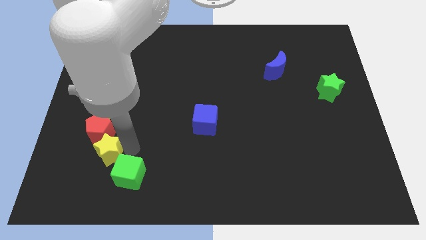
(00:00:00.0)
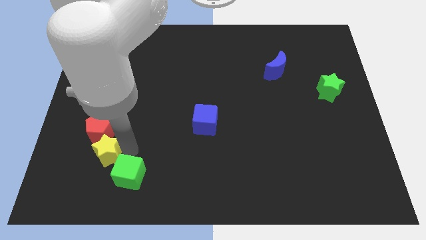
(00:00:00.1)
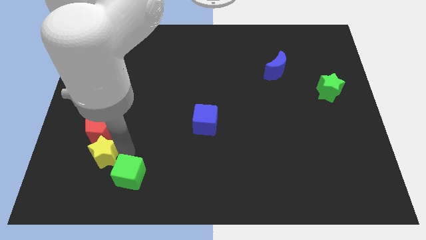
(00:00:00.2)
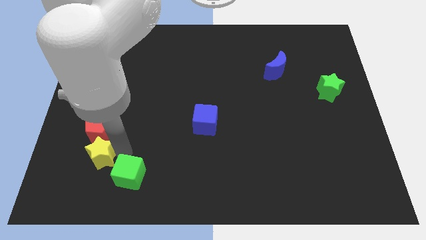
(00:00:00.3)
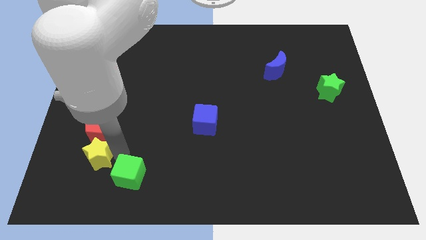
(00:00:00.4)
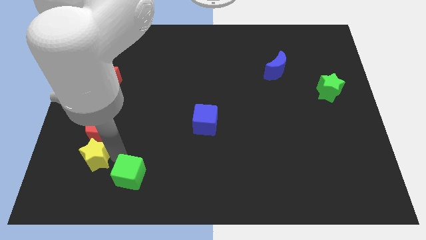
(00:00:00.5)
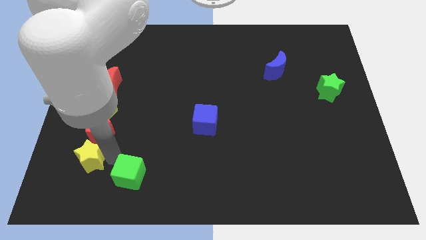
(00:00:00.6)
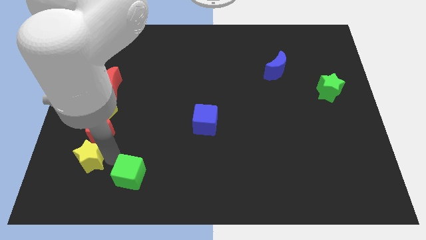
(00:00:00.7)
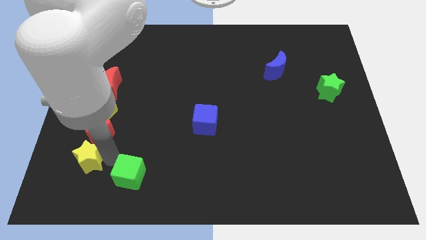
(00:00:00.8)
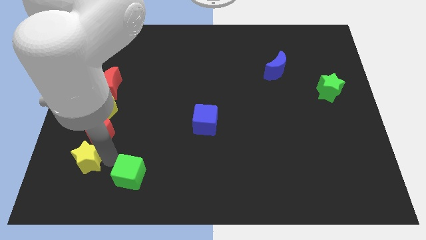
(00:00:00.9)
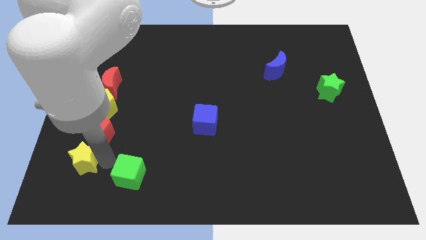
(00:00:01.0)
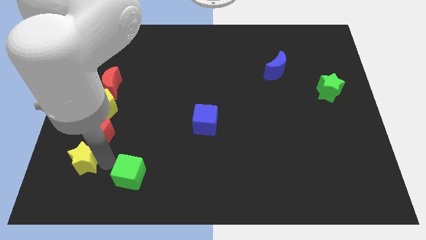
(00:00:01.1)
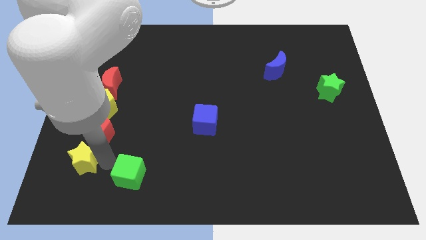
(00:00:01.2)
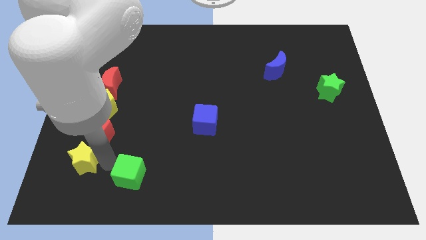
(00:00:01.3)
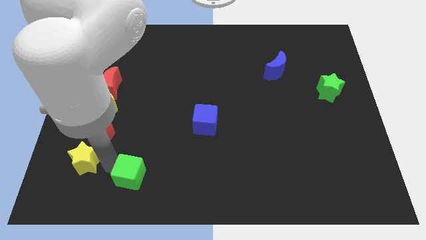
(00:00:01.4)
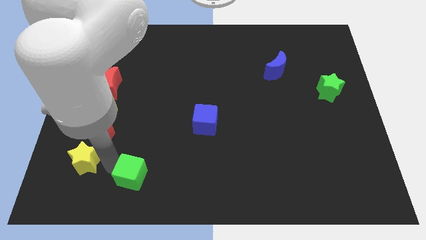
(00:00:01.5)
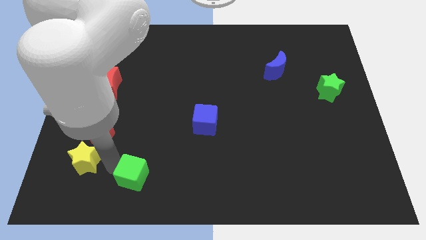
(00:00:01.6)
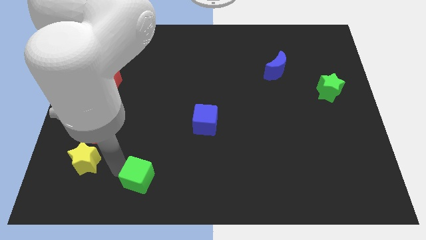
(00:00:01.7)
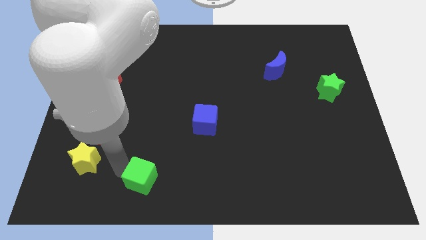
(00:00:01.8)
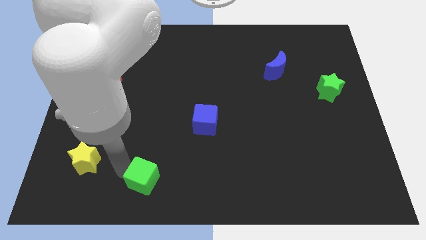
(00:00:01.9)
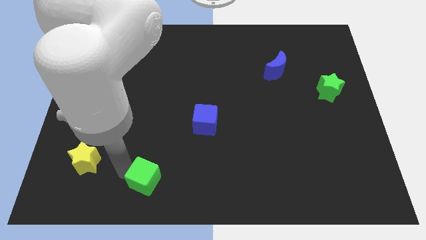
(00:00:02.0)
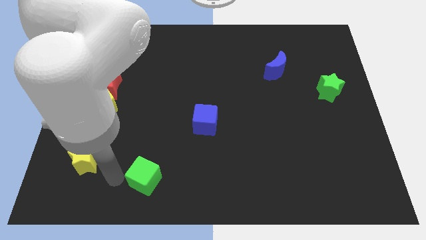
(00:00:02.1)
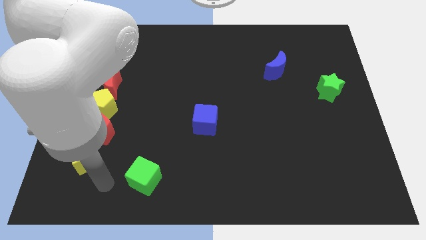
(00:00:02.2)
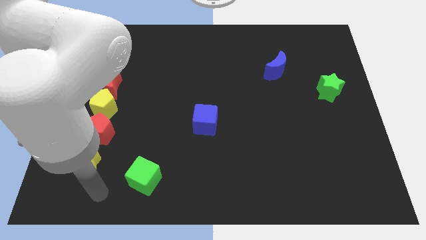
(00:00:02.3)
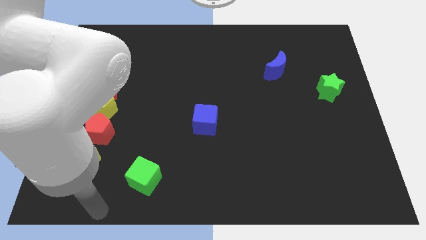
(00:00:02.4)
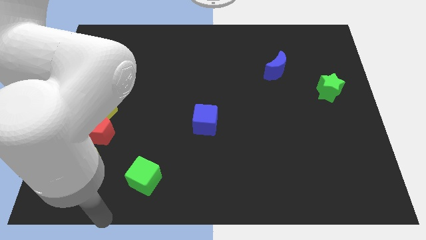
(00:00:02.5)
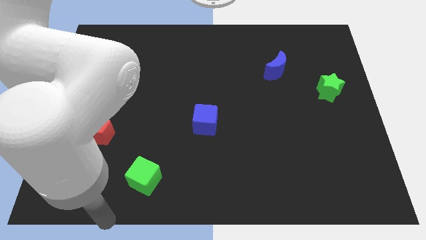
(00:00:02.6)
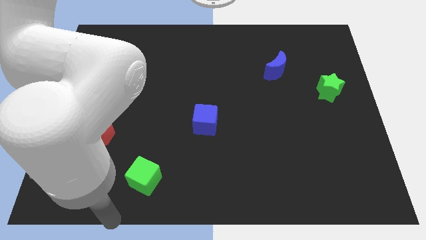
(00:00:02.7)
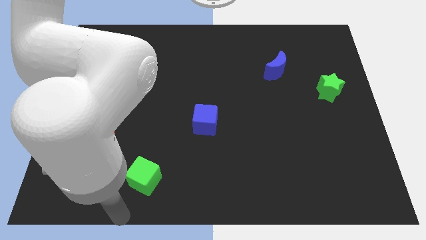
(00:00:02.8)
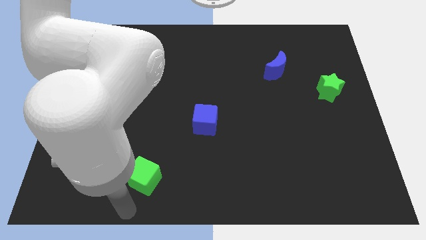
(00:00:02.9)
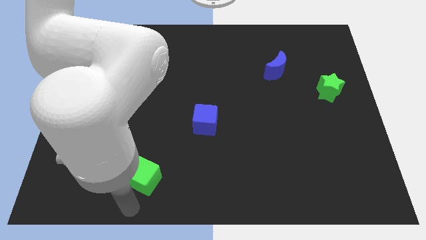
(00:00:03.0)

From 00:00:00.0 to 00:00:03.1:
separate the green cube from the yellow star

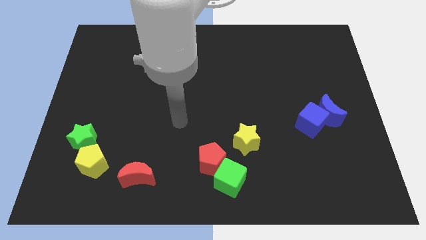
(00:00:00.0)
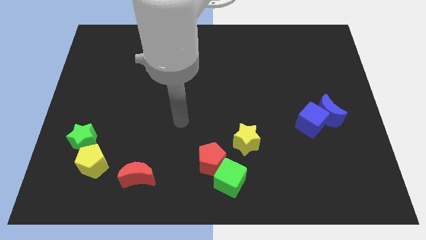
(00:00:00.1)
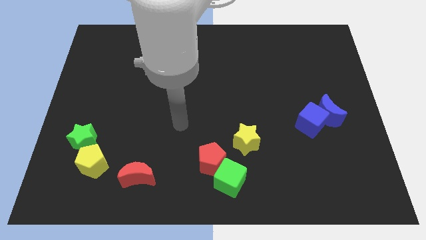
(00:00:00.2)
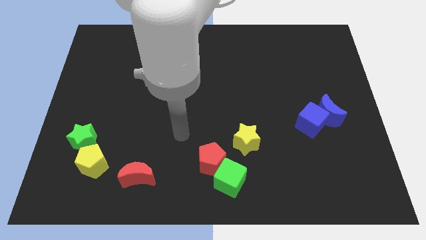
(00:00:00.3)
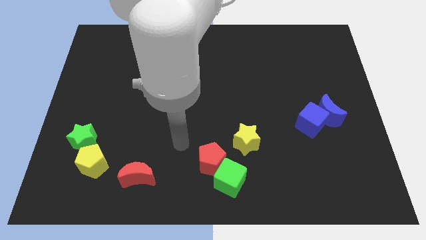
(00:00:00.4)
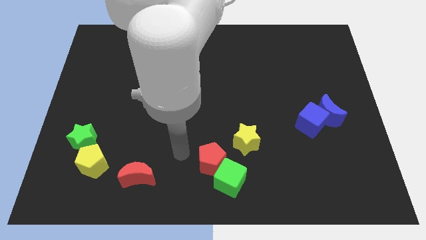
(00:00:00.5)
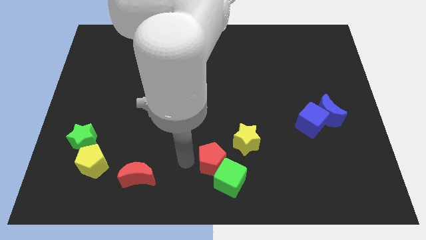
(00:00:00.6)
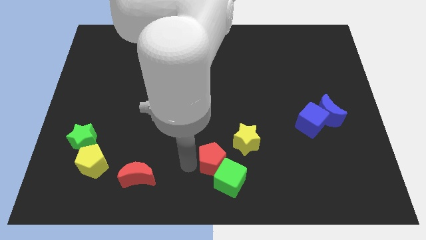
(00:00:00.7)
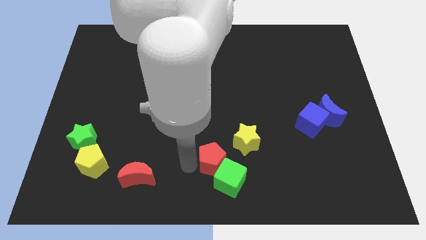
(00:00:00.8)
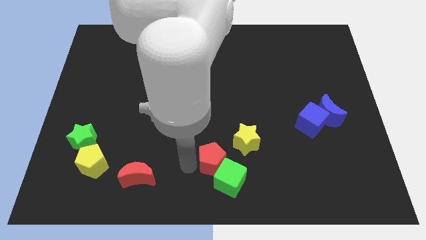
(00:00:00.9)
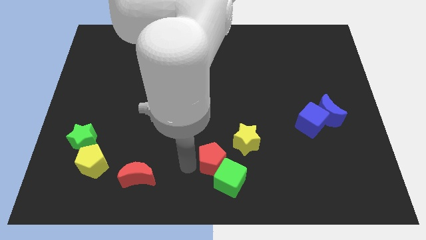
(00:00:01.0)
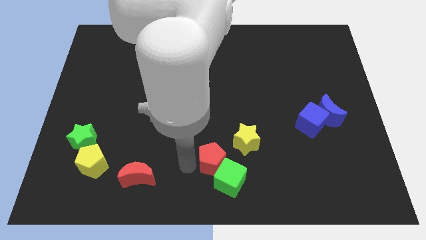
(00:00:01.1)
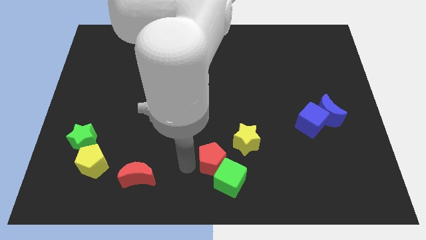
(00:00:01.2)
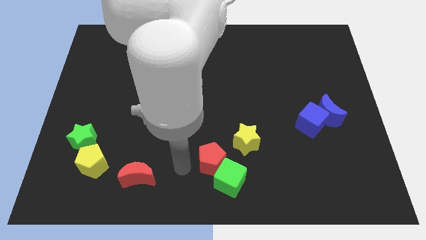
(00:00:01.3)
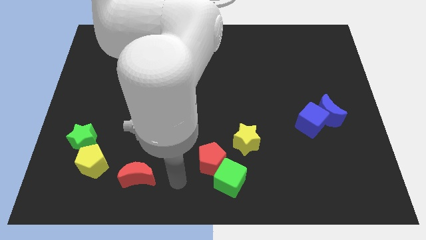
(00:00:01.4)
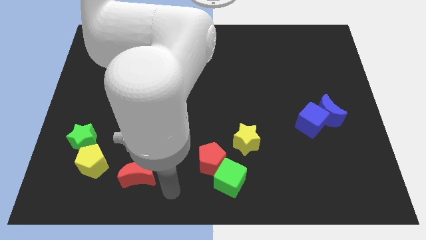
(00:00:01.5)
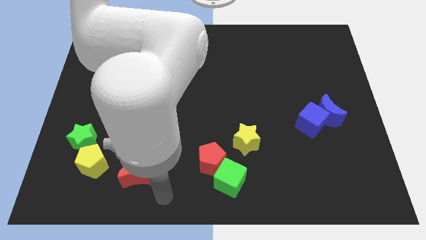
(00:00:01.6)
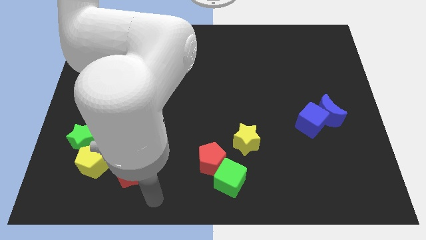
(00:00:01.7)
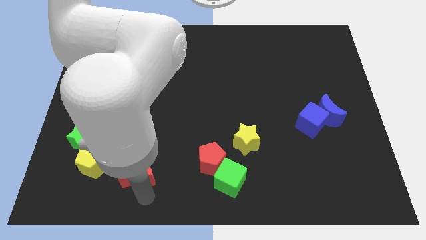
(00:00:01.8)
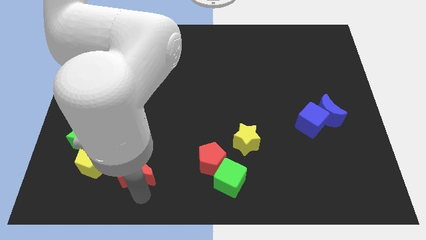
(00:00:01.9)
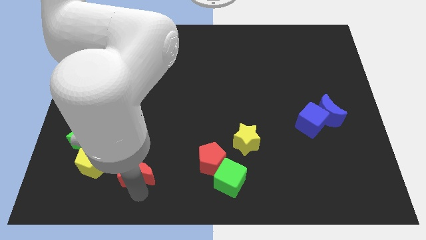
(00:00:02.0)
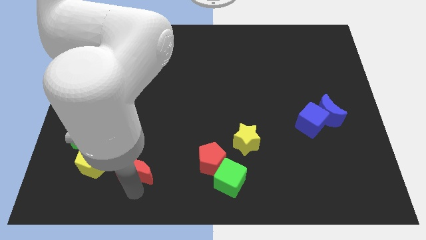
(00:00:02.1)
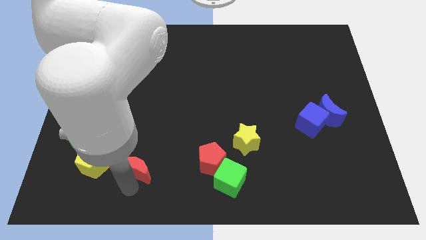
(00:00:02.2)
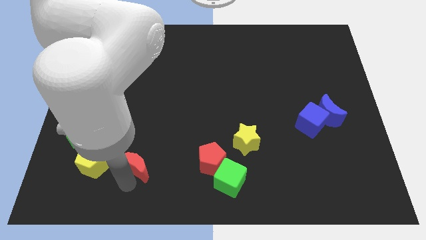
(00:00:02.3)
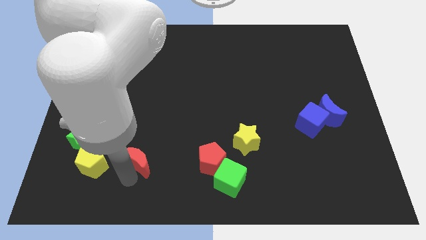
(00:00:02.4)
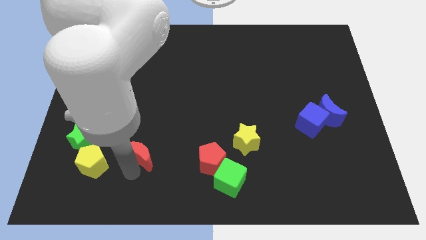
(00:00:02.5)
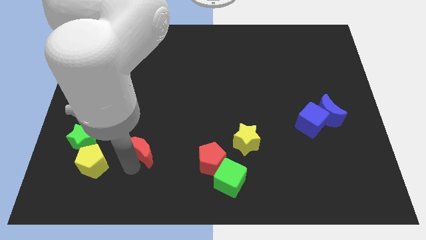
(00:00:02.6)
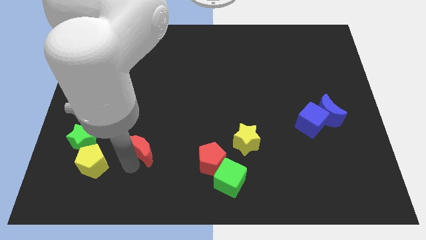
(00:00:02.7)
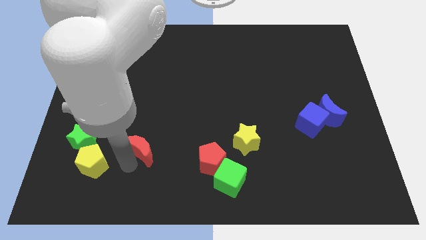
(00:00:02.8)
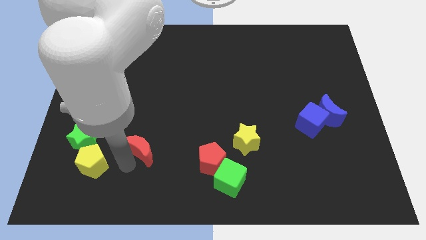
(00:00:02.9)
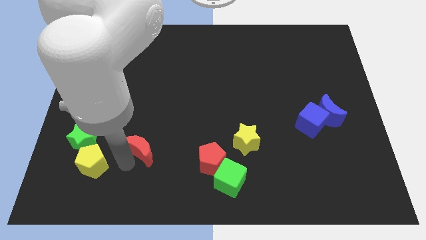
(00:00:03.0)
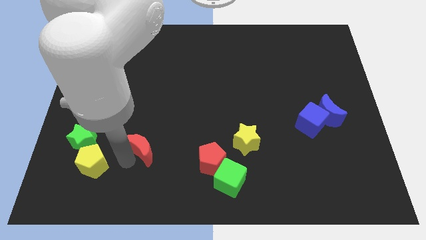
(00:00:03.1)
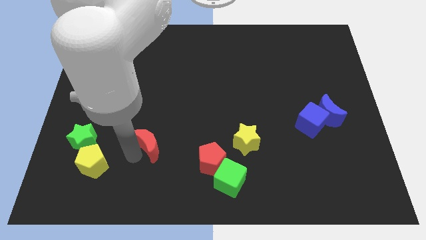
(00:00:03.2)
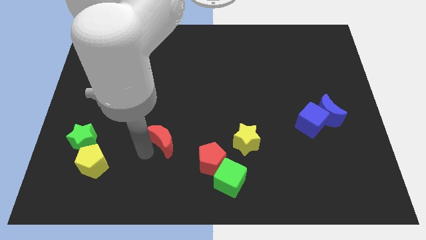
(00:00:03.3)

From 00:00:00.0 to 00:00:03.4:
drag the red moon towards up

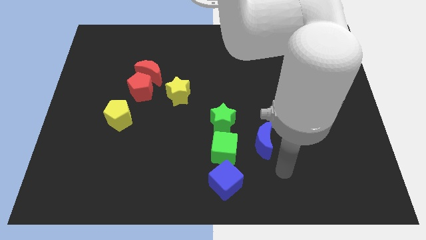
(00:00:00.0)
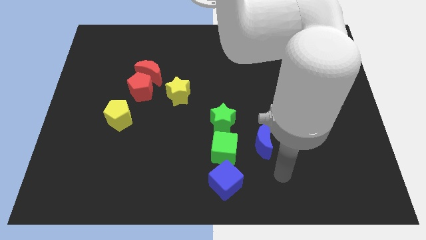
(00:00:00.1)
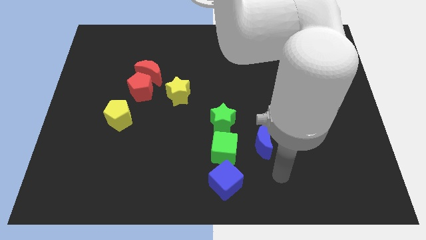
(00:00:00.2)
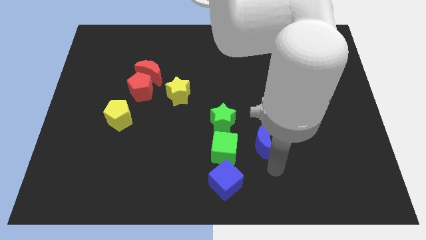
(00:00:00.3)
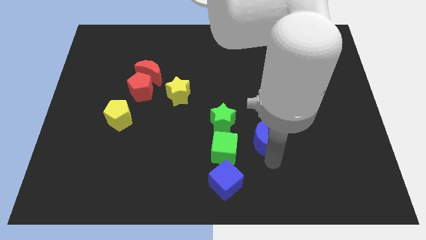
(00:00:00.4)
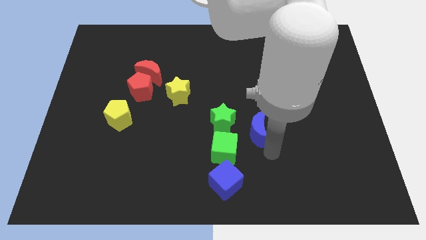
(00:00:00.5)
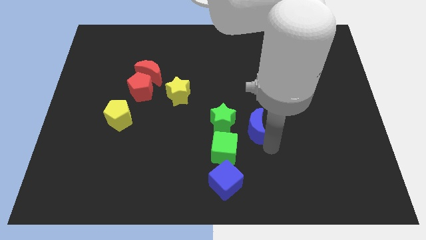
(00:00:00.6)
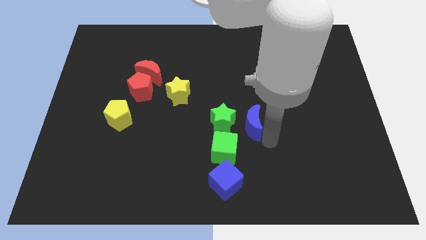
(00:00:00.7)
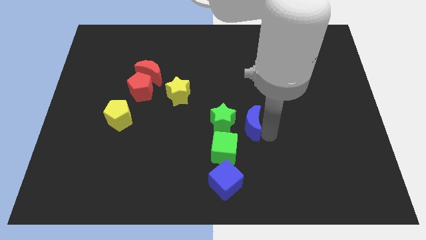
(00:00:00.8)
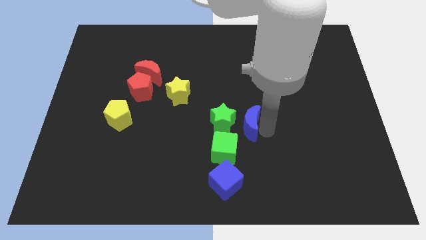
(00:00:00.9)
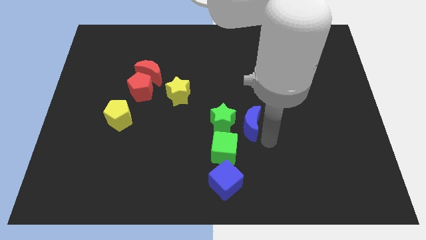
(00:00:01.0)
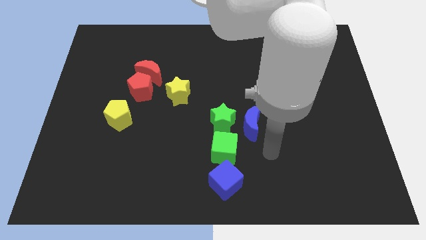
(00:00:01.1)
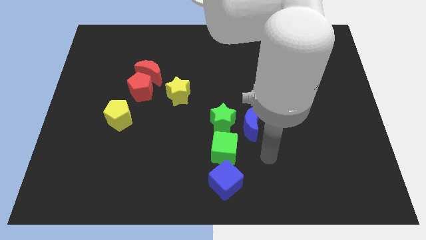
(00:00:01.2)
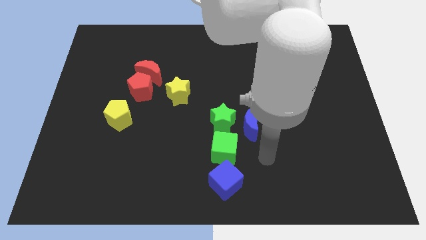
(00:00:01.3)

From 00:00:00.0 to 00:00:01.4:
move the blue crescent to right of the star

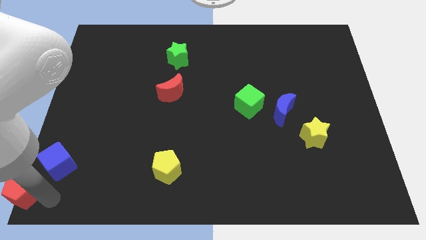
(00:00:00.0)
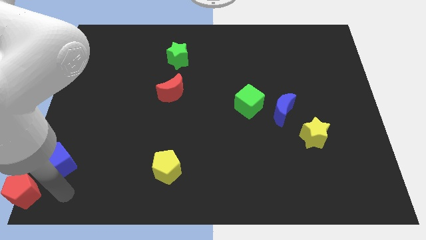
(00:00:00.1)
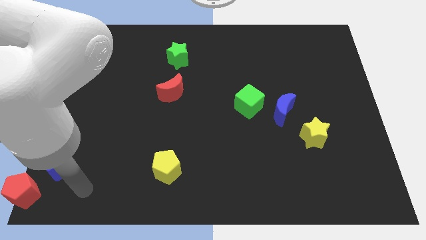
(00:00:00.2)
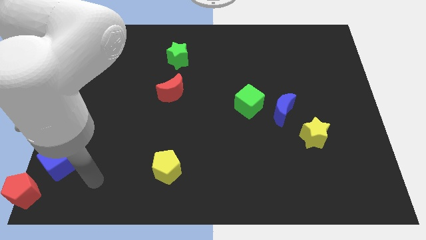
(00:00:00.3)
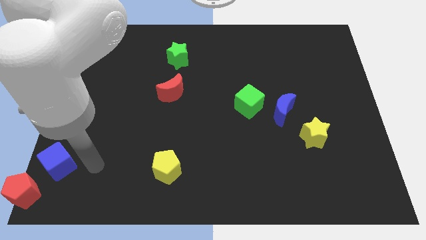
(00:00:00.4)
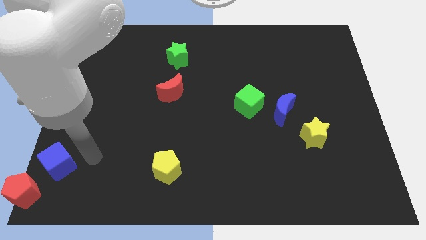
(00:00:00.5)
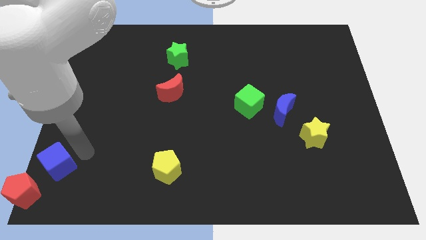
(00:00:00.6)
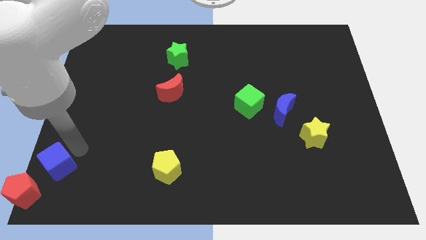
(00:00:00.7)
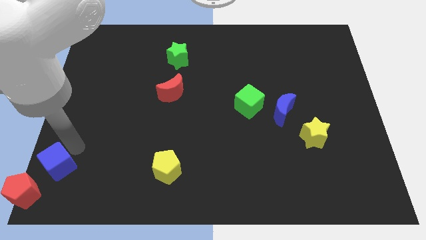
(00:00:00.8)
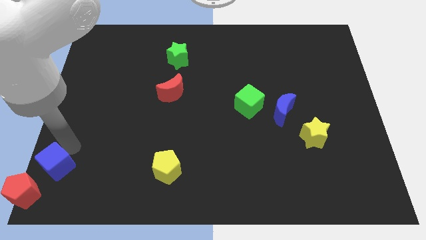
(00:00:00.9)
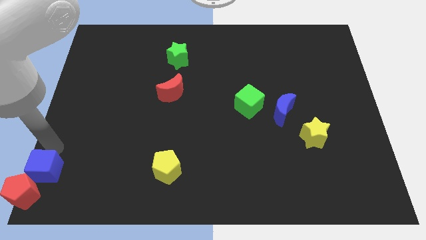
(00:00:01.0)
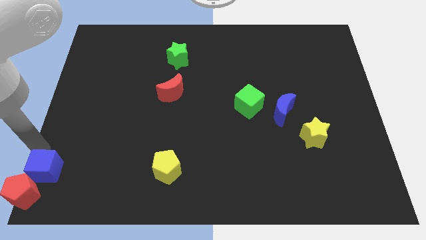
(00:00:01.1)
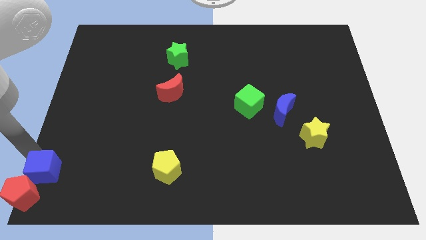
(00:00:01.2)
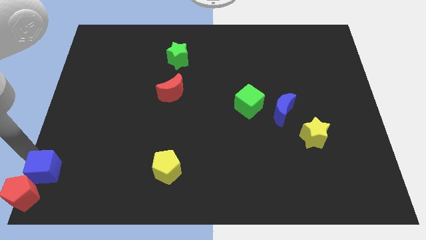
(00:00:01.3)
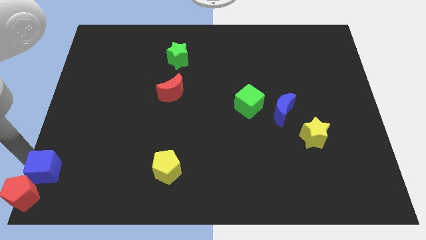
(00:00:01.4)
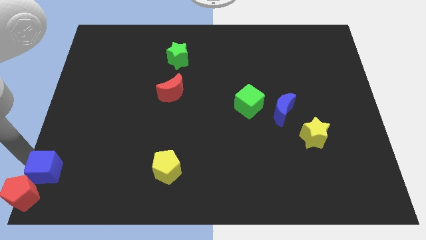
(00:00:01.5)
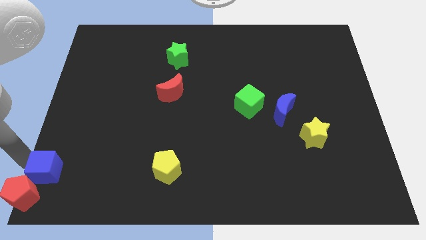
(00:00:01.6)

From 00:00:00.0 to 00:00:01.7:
push blue cube into red pentagon
